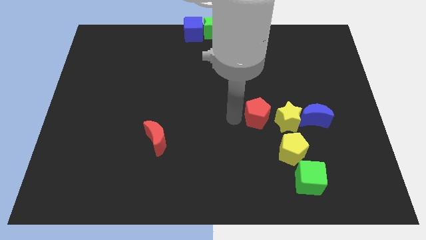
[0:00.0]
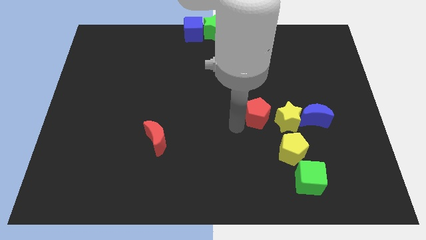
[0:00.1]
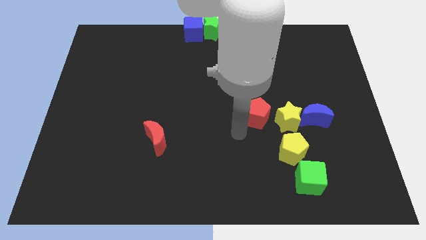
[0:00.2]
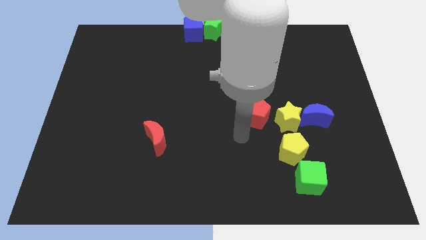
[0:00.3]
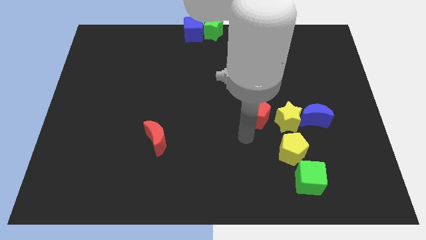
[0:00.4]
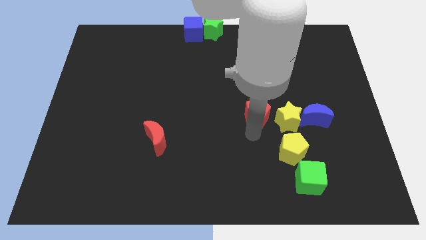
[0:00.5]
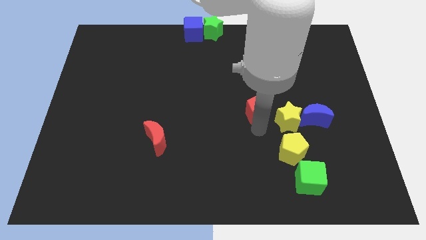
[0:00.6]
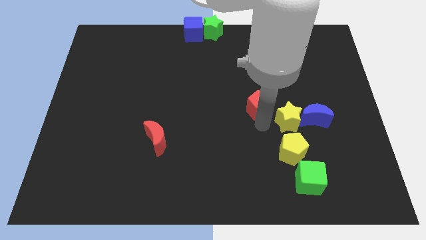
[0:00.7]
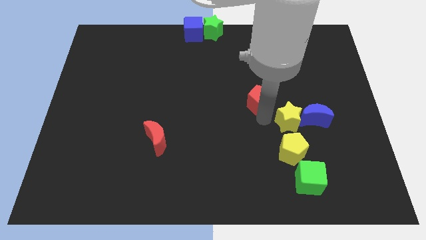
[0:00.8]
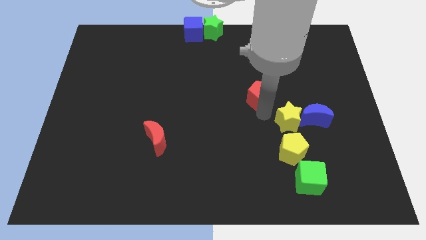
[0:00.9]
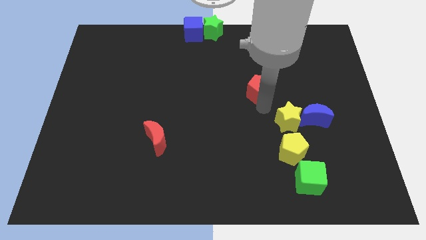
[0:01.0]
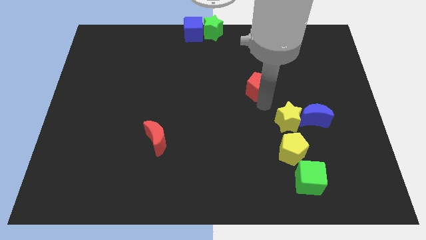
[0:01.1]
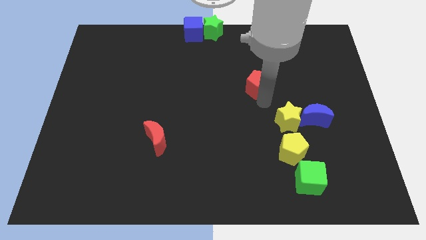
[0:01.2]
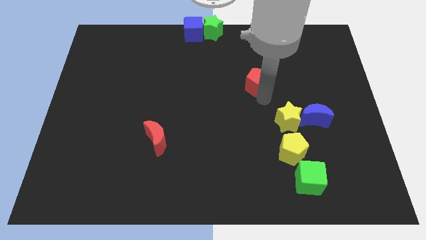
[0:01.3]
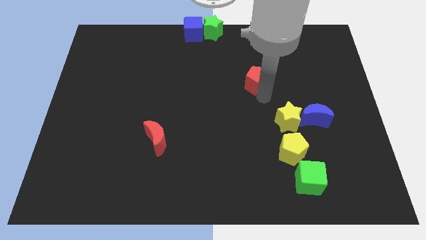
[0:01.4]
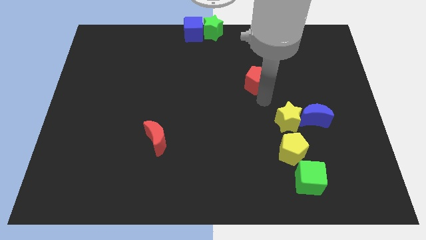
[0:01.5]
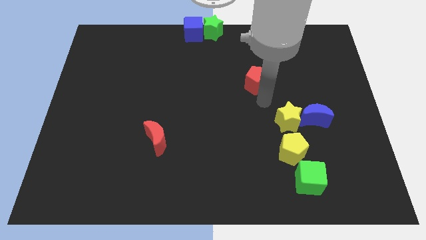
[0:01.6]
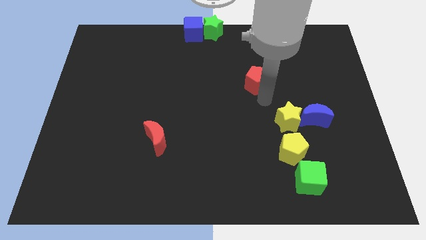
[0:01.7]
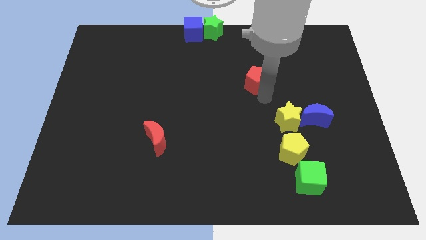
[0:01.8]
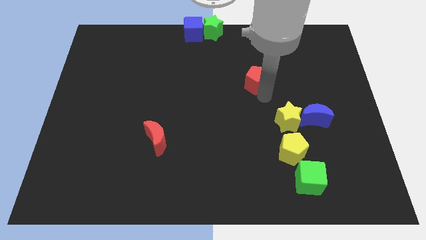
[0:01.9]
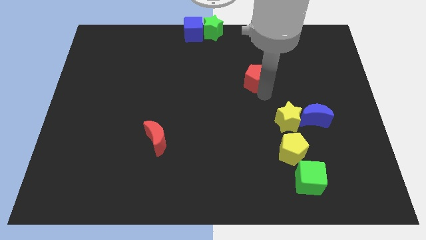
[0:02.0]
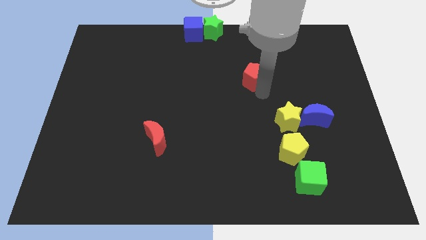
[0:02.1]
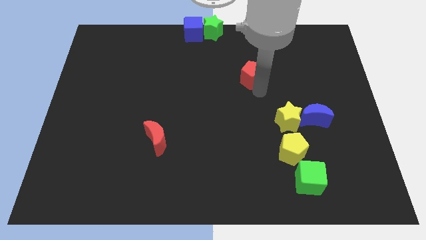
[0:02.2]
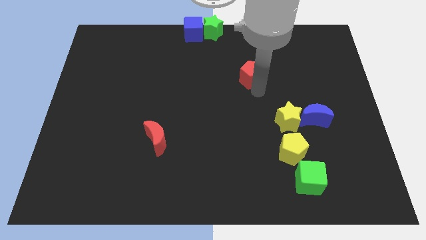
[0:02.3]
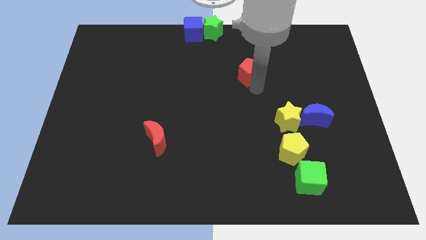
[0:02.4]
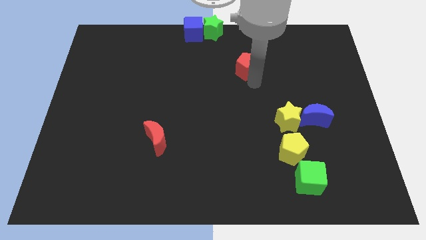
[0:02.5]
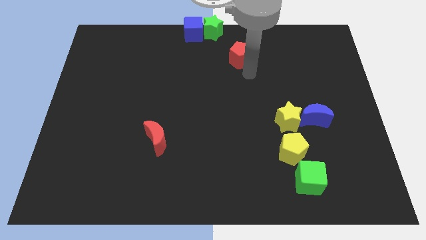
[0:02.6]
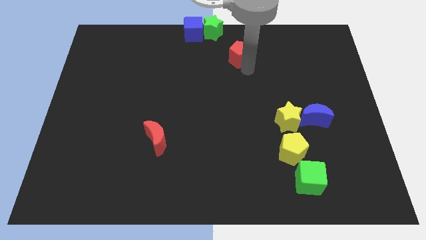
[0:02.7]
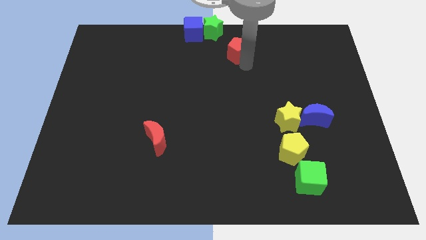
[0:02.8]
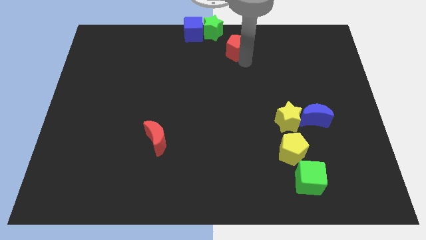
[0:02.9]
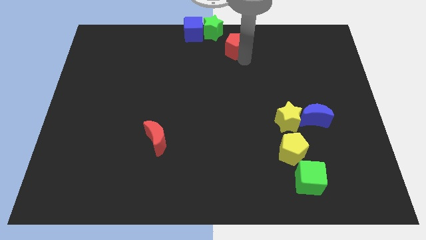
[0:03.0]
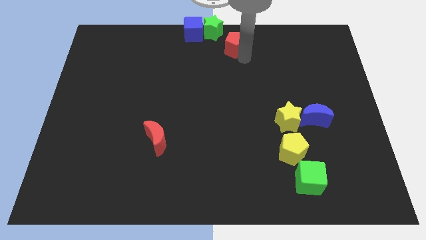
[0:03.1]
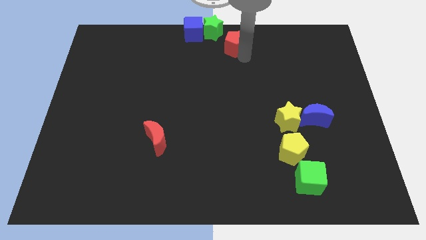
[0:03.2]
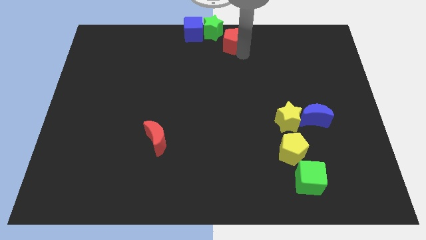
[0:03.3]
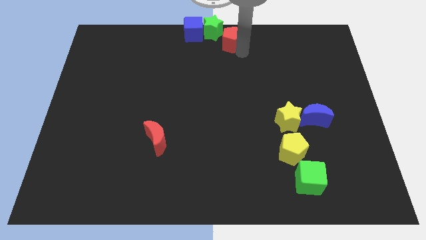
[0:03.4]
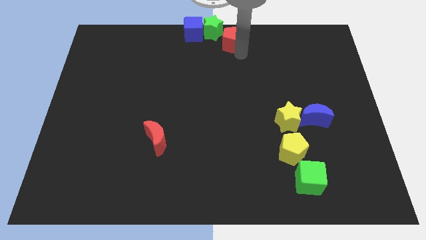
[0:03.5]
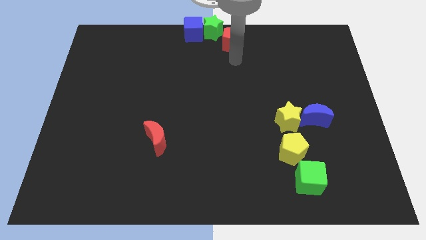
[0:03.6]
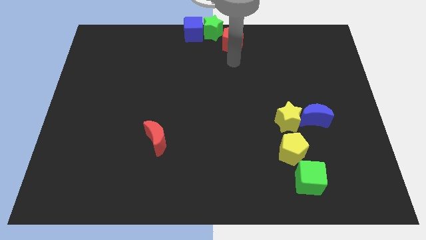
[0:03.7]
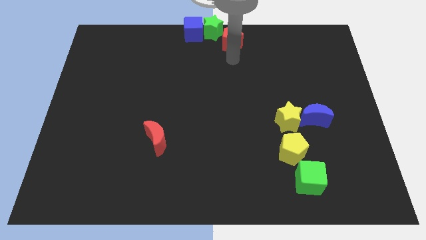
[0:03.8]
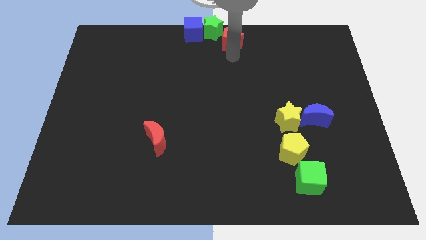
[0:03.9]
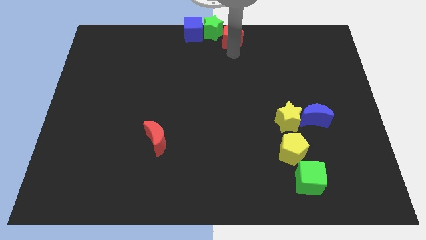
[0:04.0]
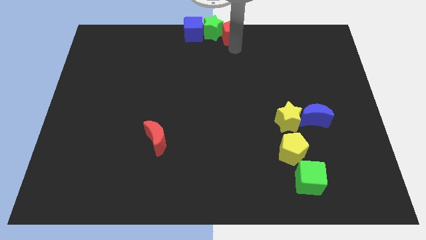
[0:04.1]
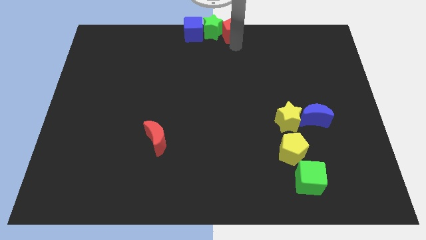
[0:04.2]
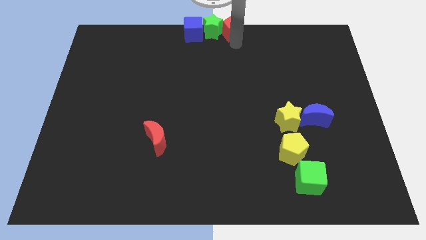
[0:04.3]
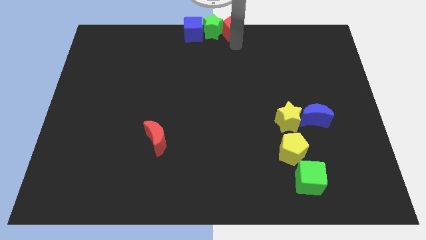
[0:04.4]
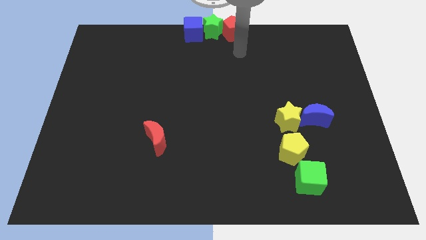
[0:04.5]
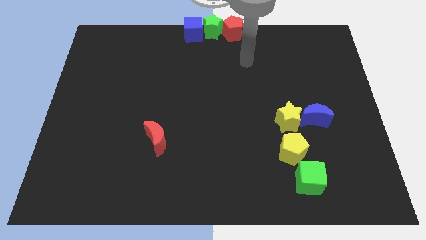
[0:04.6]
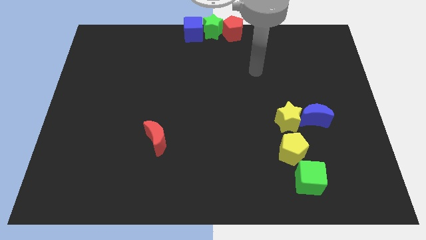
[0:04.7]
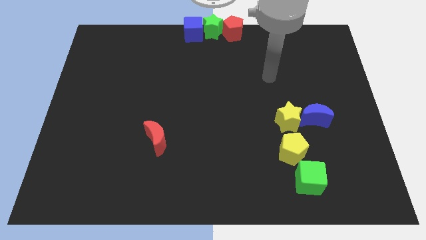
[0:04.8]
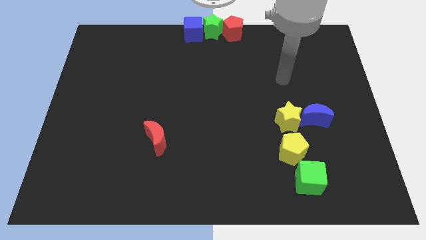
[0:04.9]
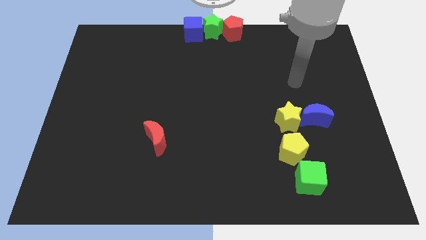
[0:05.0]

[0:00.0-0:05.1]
place red pentagon to the right of green star

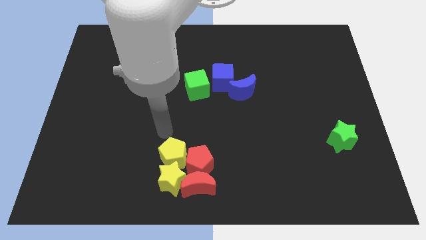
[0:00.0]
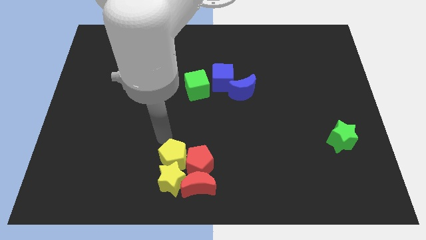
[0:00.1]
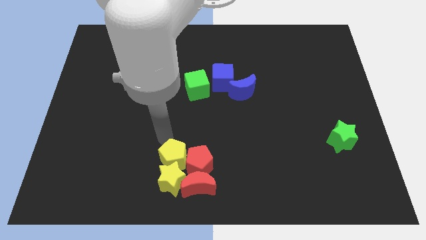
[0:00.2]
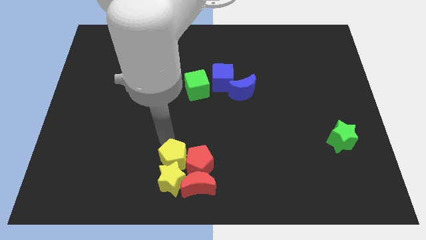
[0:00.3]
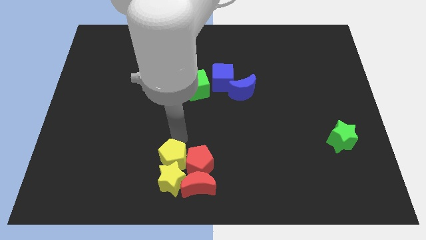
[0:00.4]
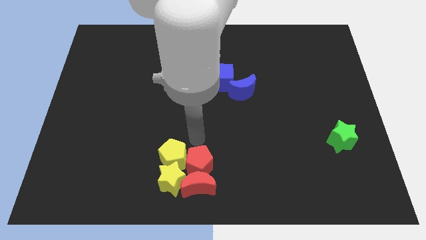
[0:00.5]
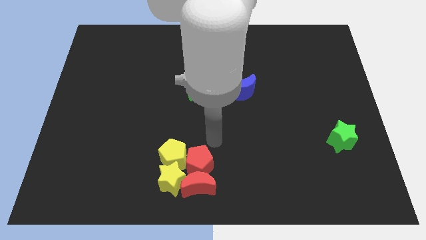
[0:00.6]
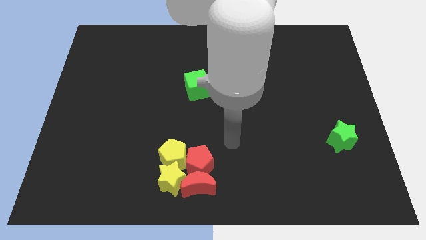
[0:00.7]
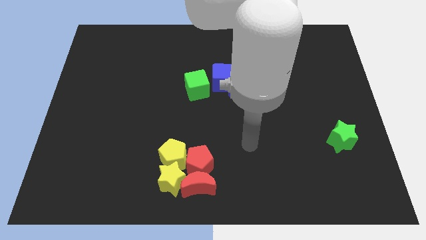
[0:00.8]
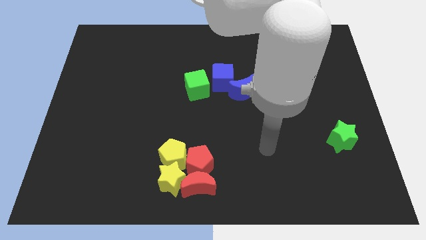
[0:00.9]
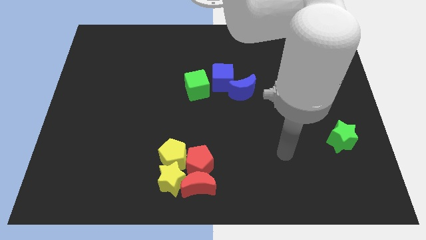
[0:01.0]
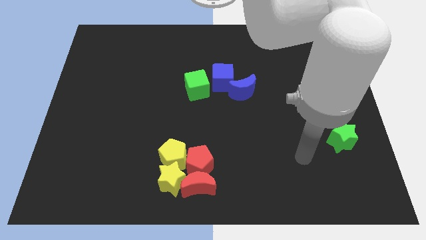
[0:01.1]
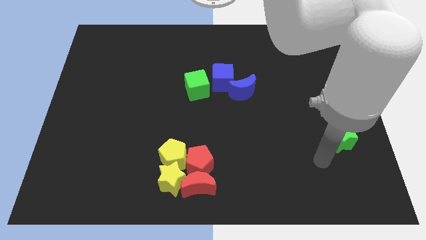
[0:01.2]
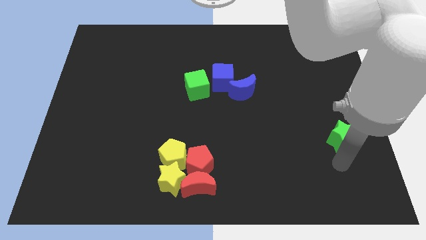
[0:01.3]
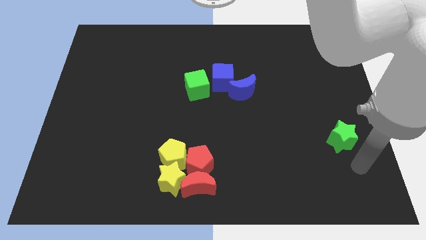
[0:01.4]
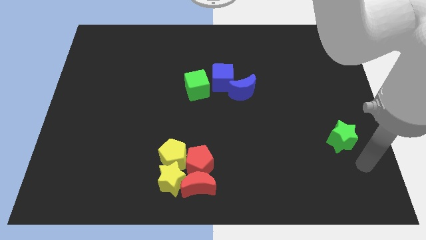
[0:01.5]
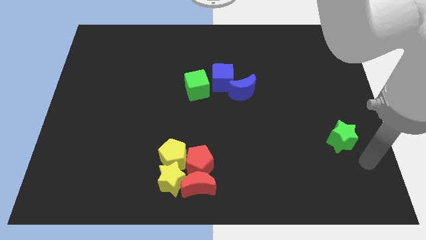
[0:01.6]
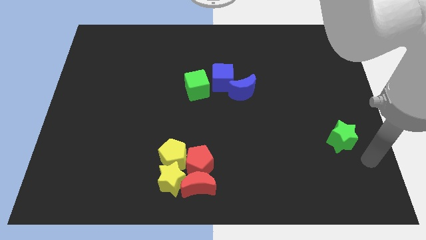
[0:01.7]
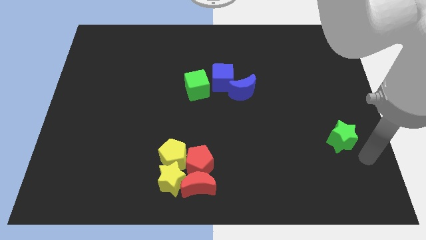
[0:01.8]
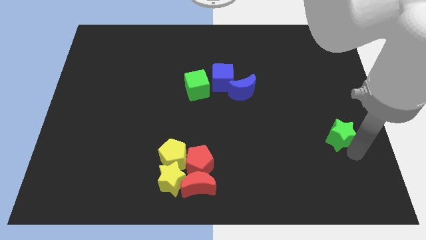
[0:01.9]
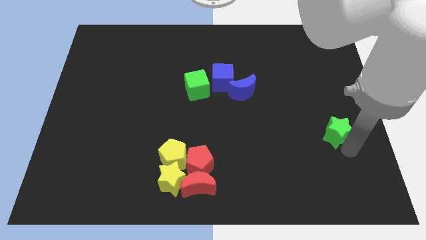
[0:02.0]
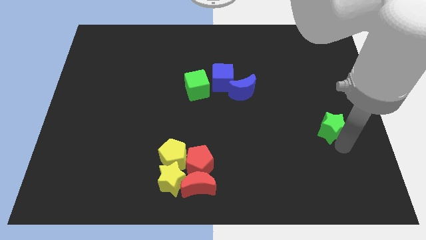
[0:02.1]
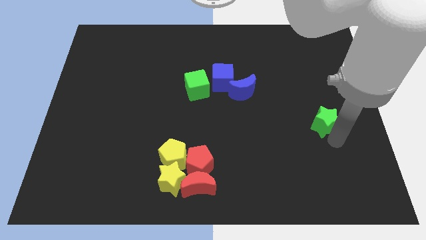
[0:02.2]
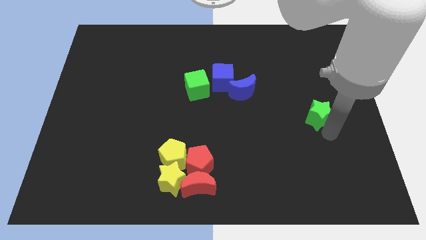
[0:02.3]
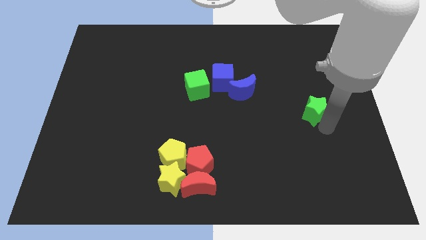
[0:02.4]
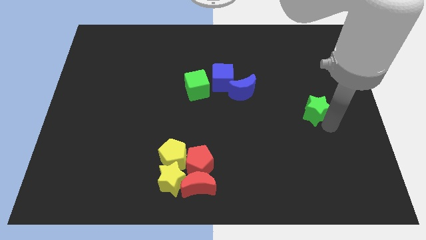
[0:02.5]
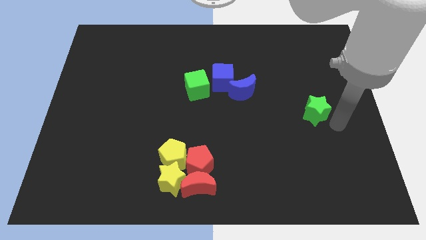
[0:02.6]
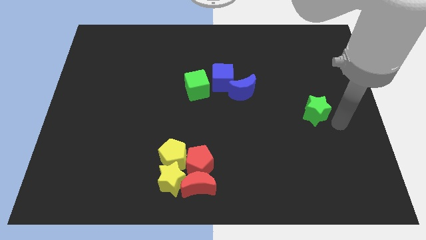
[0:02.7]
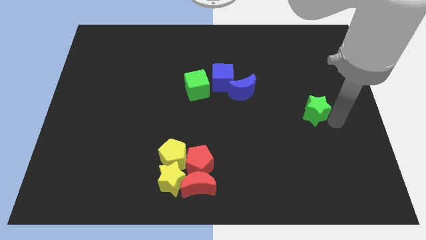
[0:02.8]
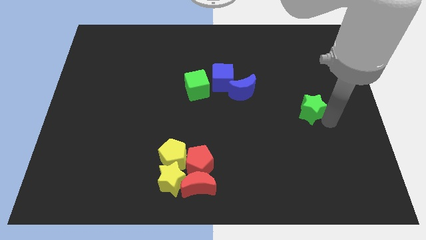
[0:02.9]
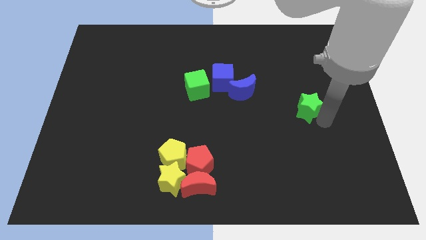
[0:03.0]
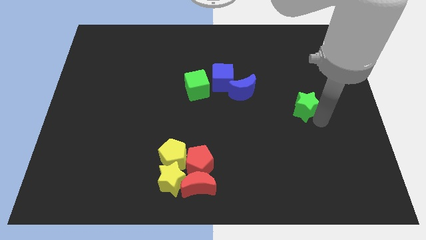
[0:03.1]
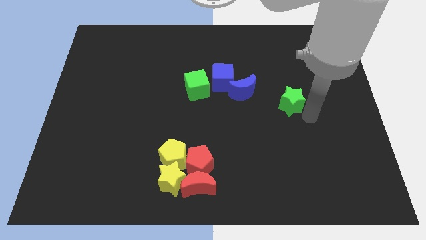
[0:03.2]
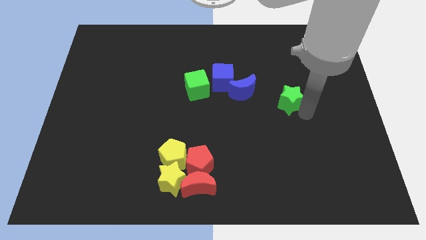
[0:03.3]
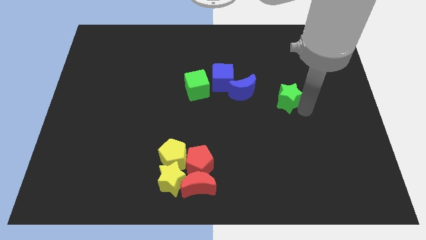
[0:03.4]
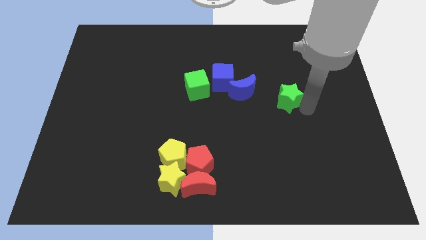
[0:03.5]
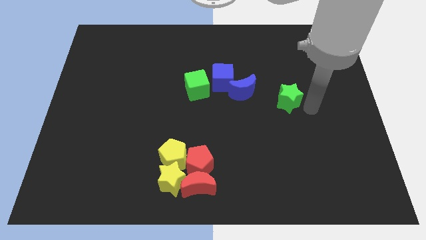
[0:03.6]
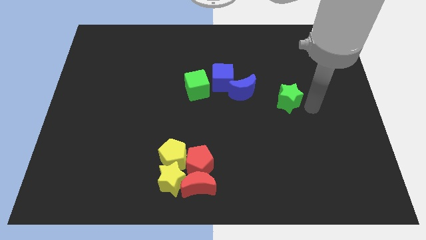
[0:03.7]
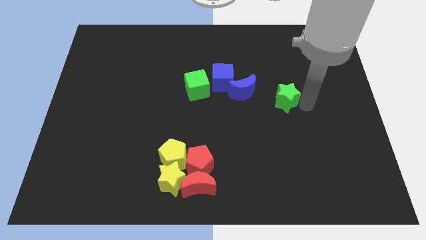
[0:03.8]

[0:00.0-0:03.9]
move the green star towards the left side of the board
